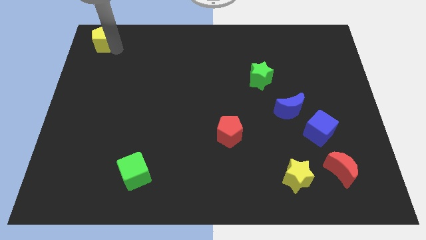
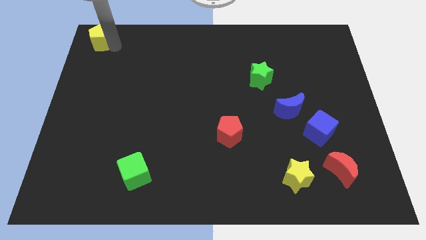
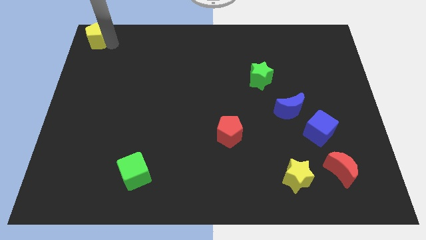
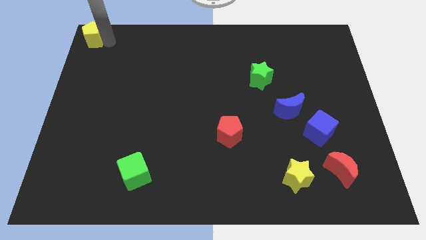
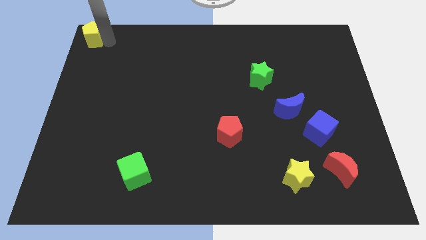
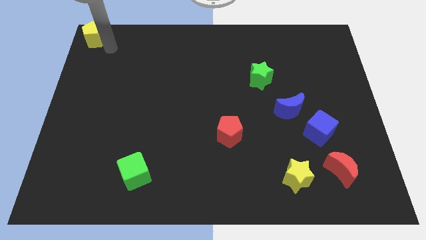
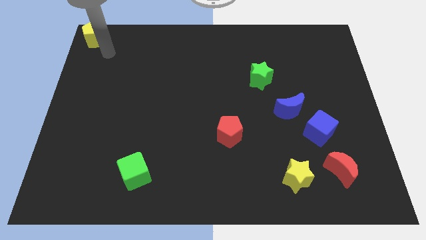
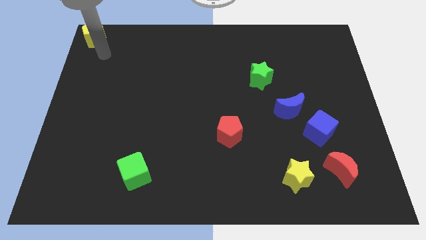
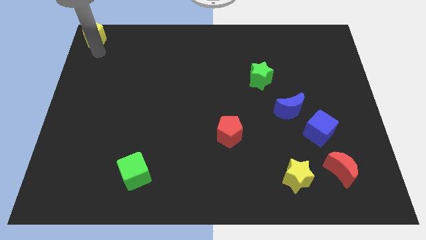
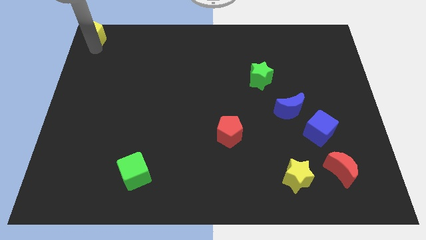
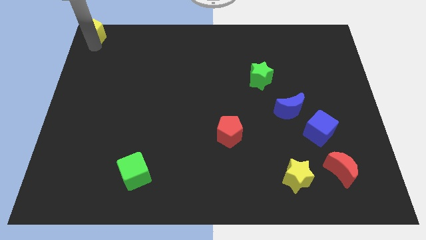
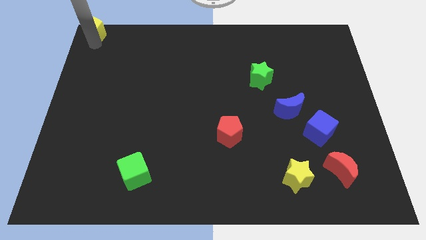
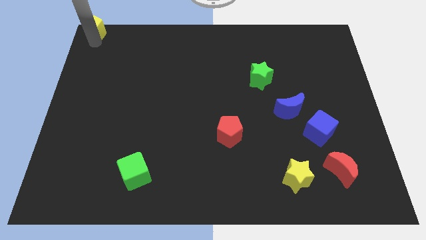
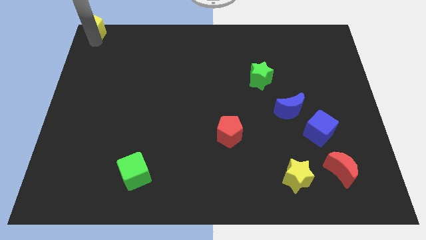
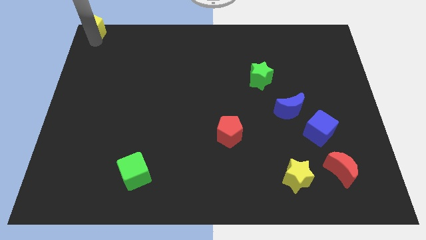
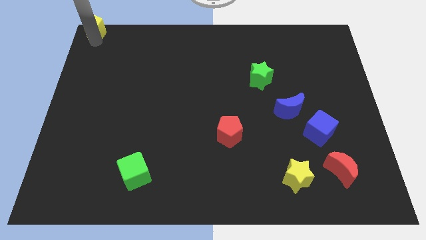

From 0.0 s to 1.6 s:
push the yellow pentagon to the top left of the board

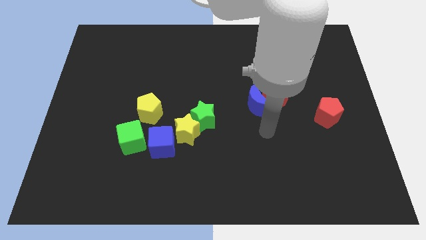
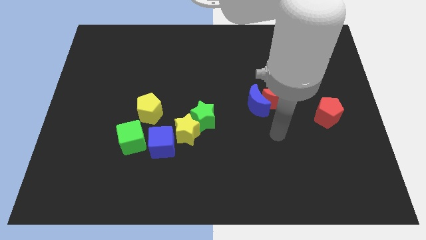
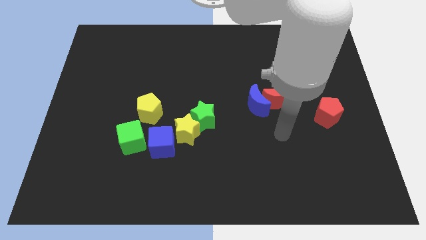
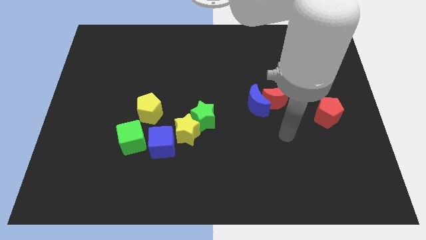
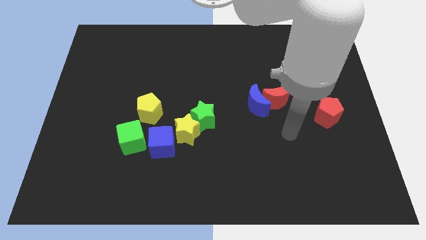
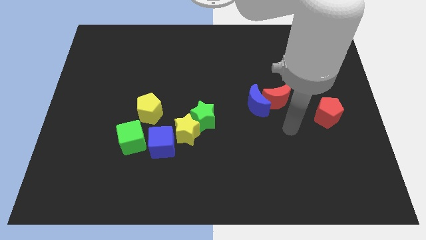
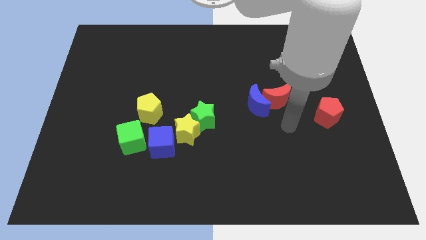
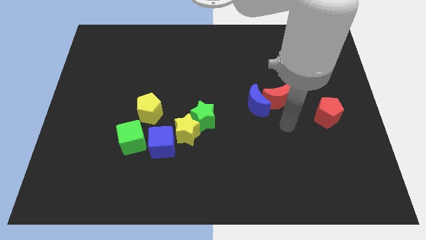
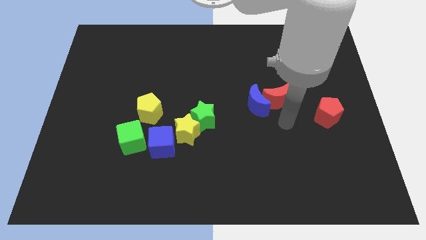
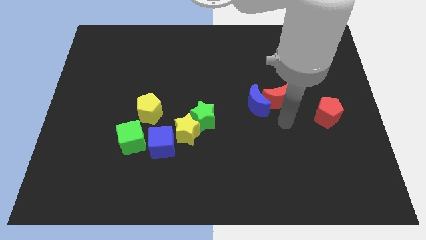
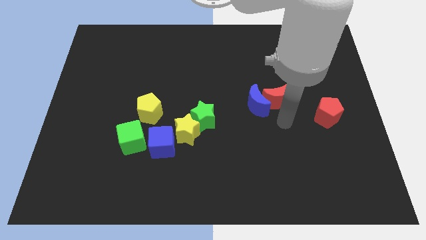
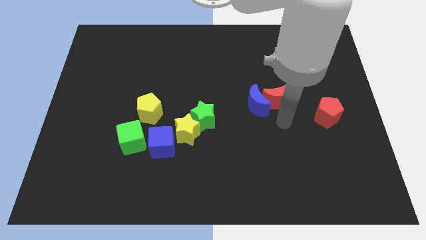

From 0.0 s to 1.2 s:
point your arm at the bottom of red moon

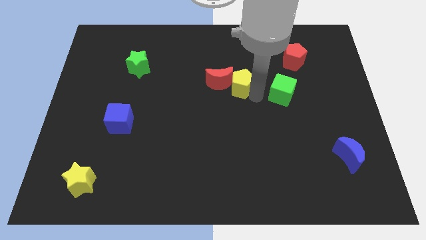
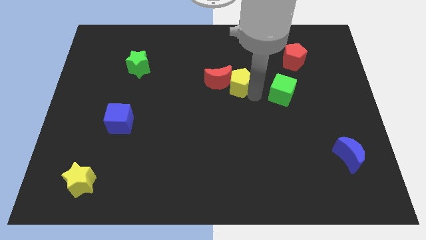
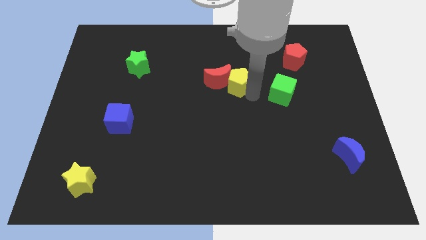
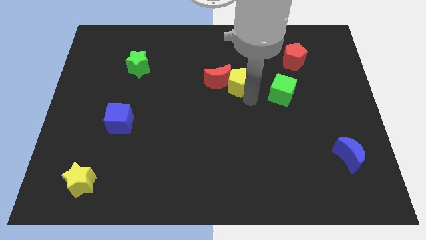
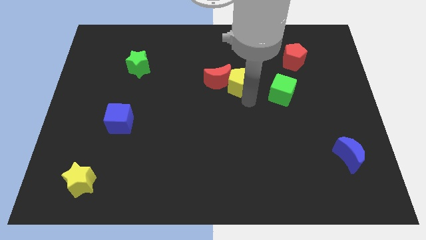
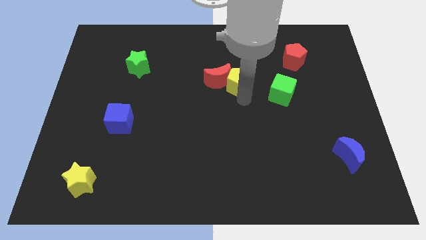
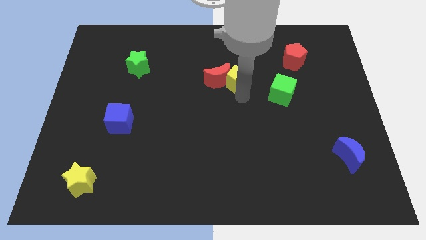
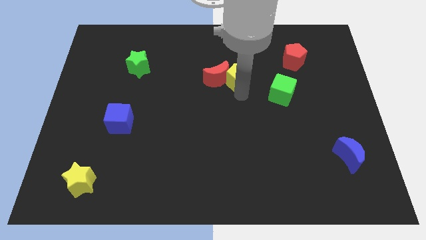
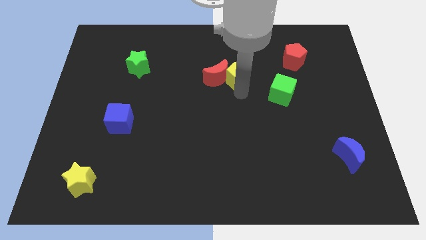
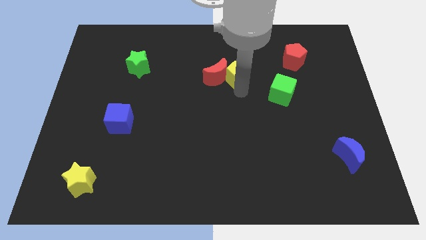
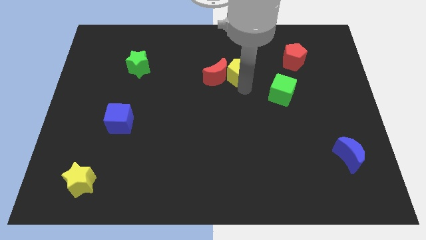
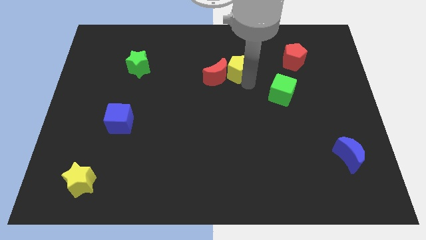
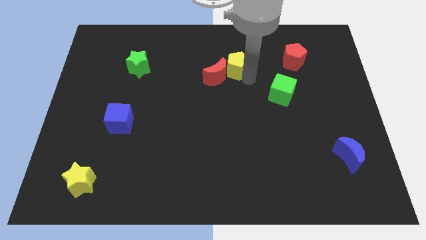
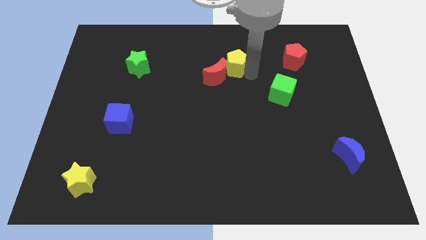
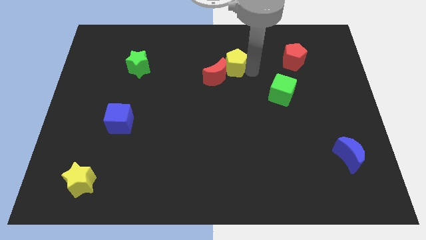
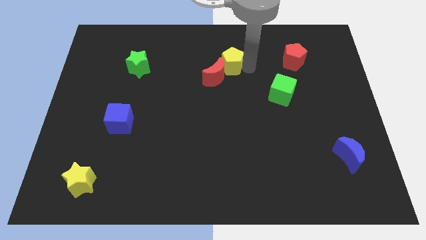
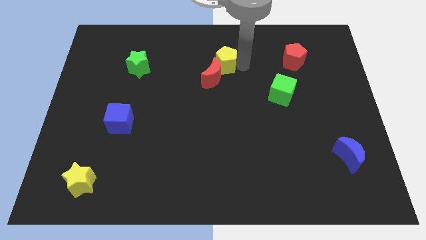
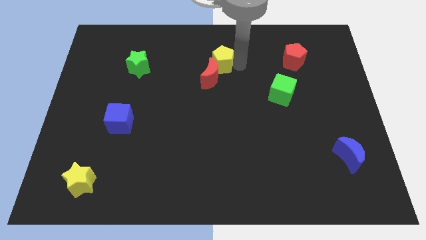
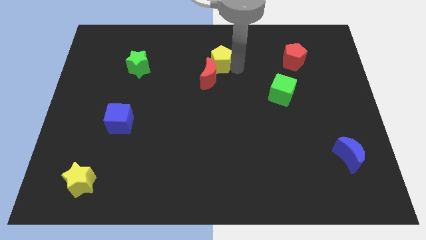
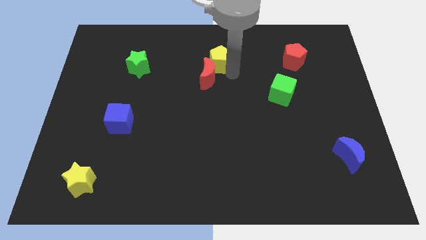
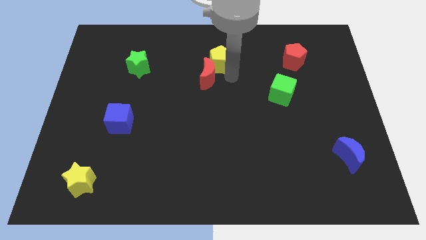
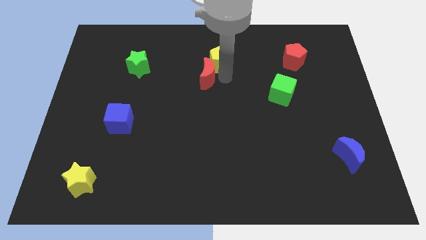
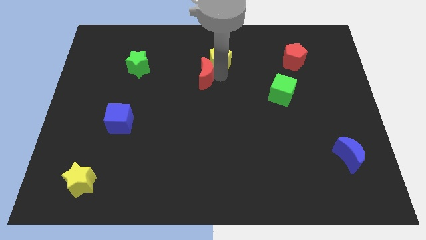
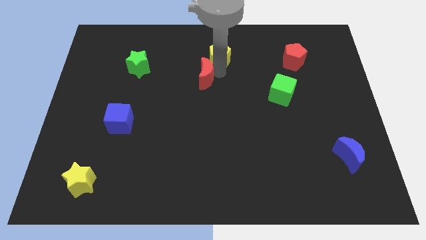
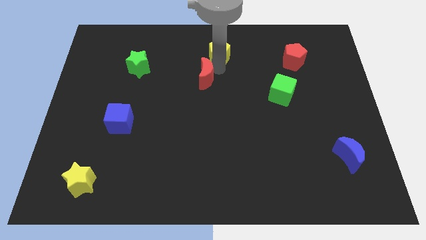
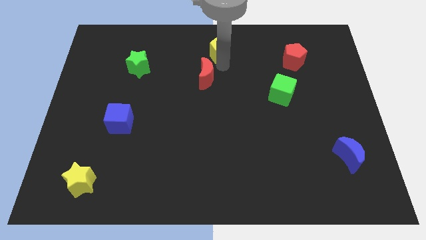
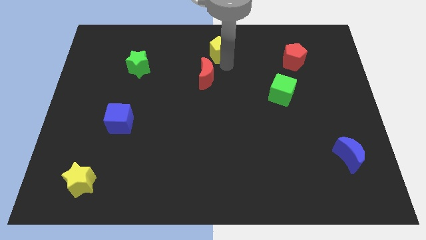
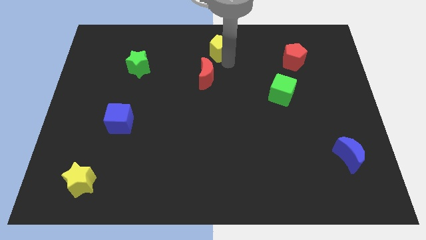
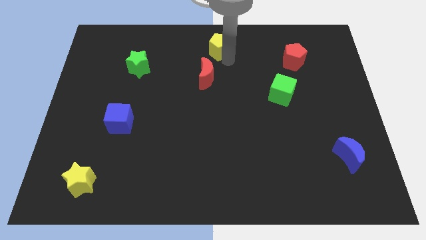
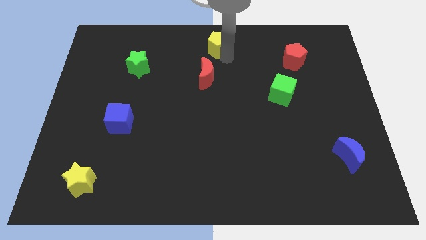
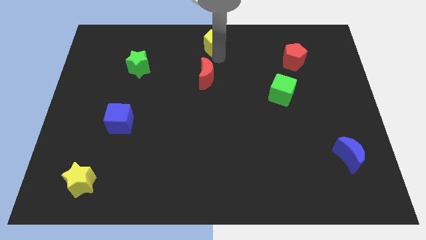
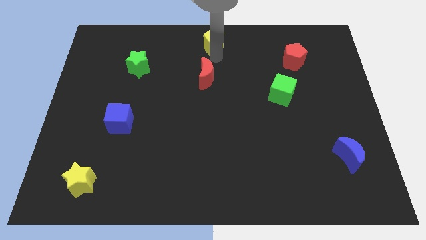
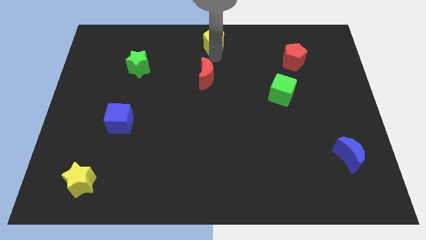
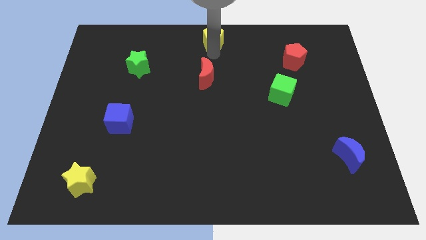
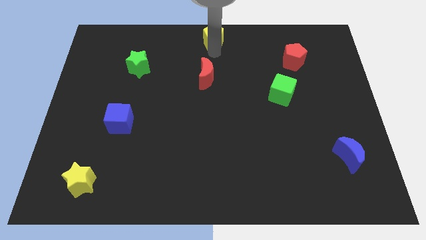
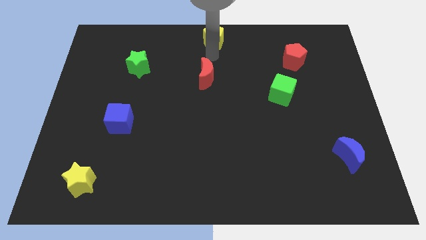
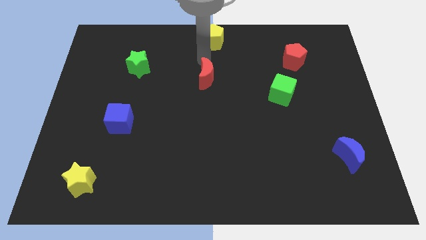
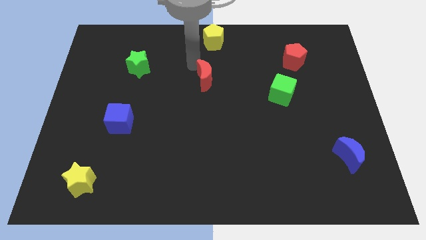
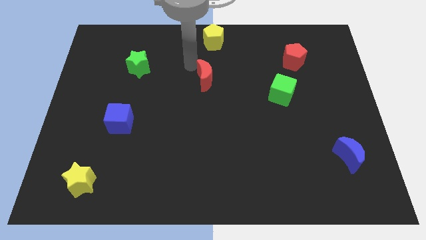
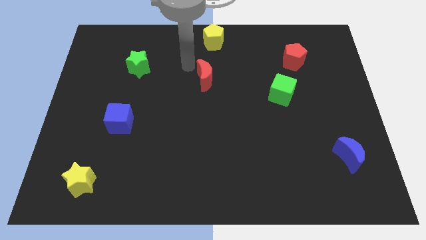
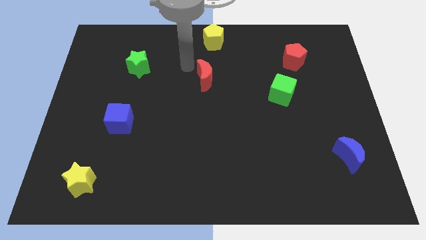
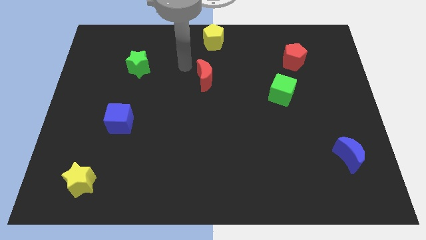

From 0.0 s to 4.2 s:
place the yellow pentagon at the top center of the board

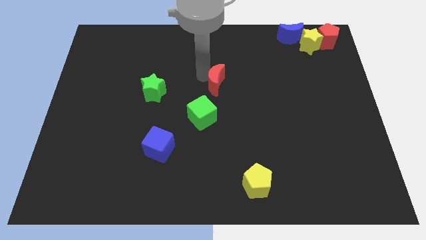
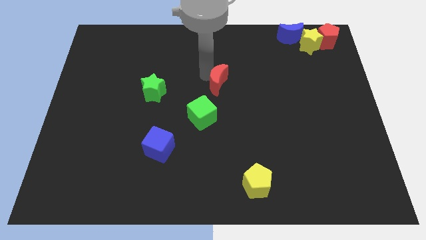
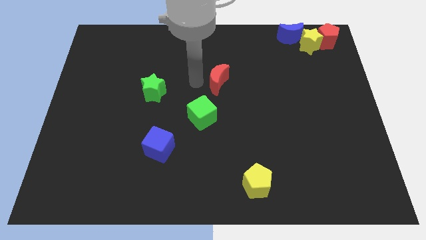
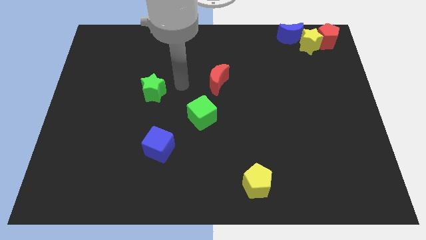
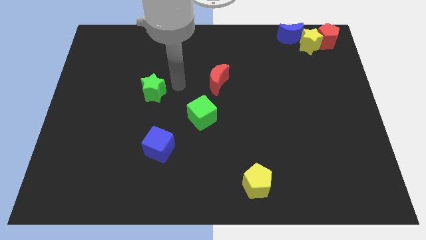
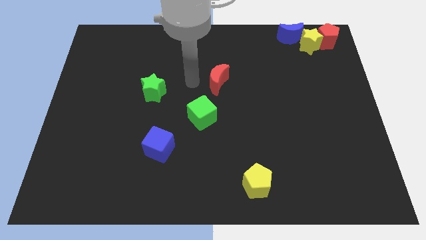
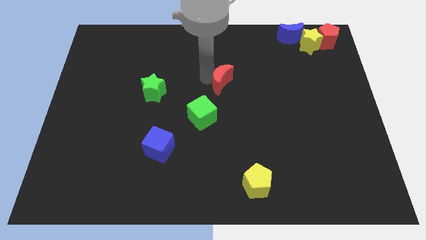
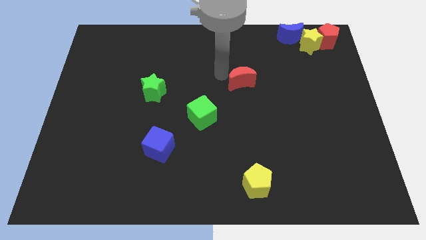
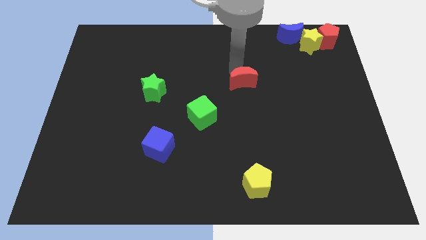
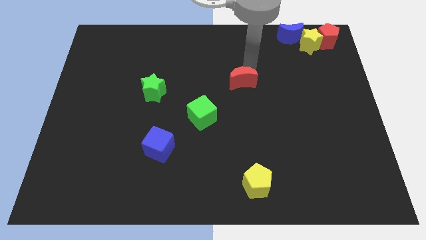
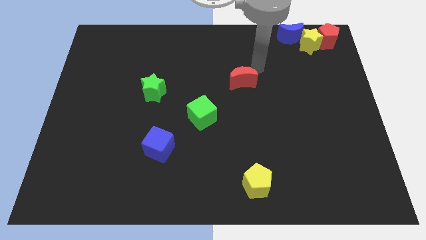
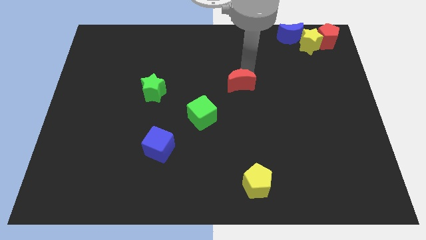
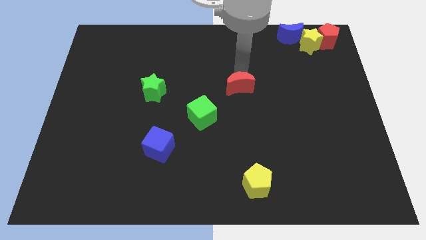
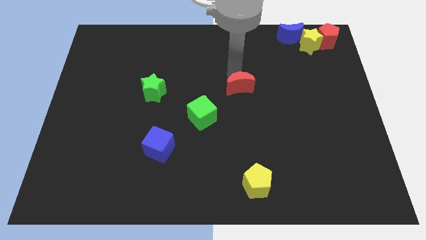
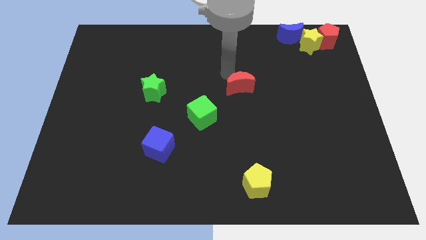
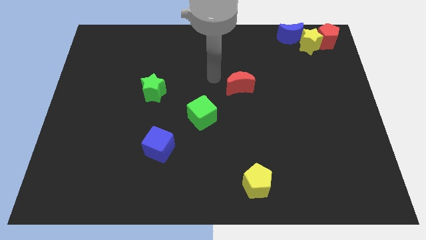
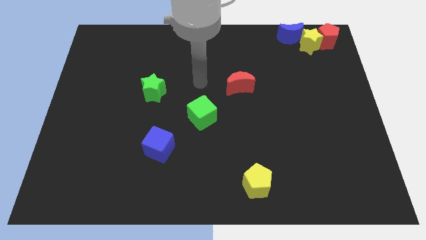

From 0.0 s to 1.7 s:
place your arm in between the green star and red moon

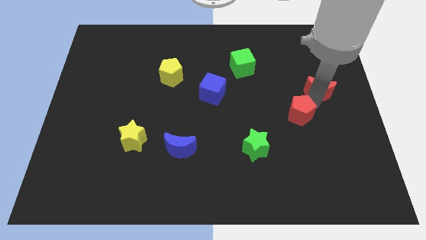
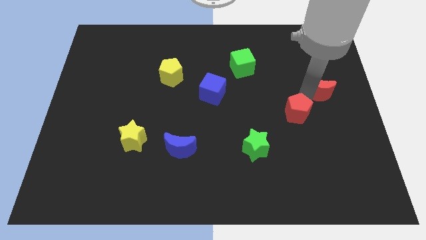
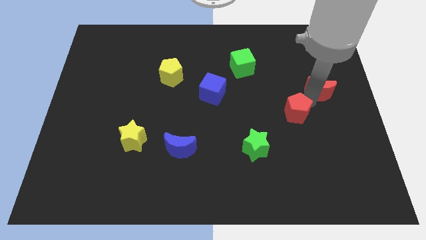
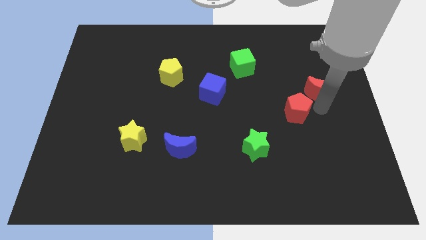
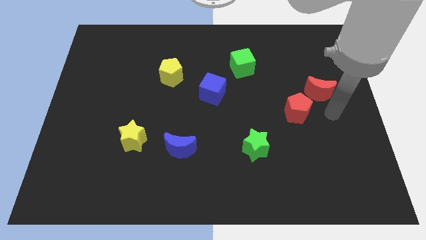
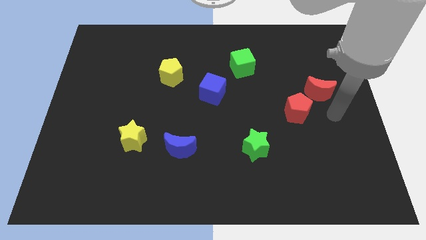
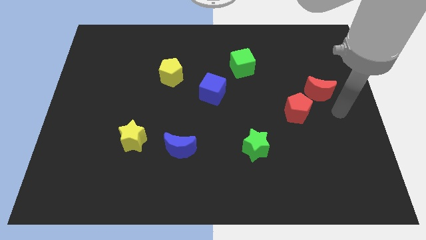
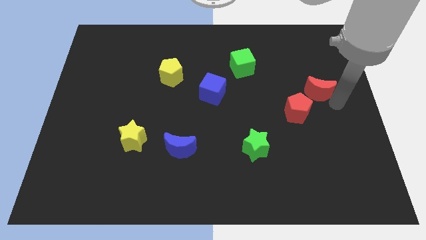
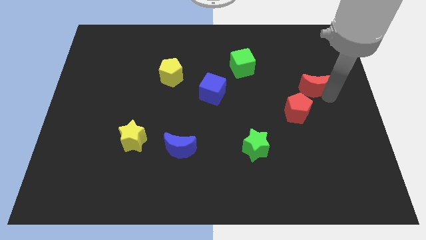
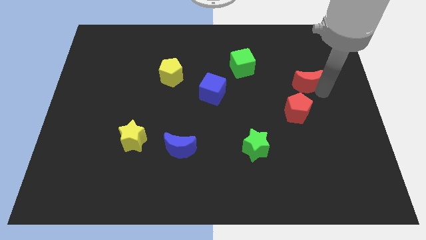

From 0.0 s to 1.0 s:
move red moon slightly upwards
